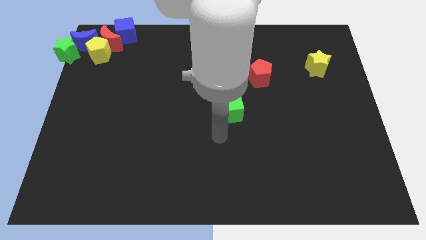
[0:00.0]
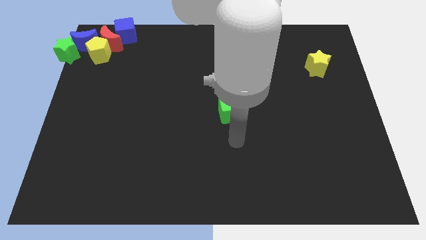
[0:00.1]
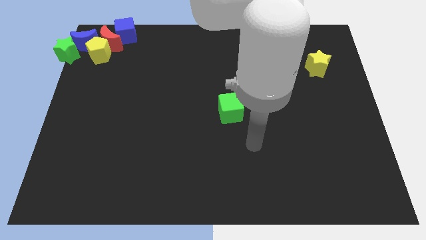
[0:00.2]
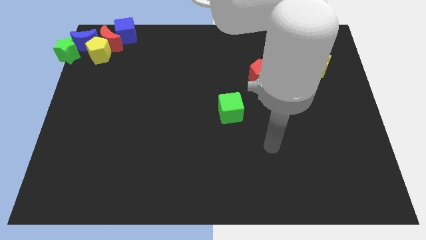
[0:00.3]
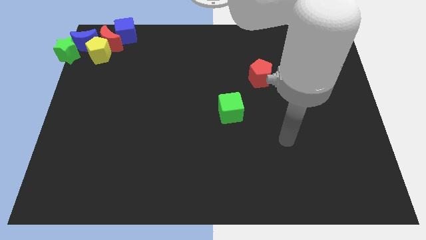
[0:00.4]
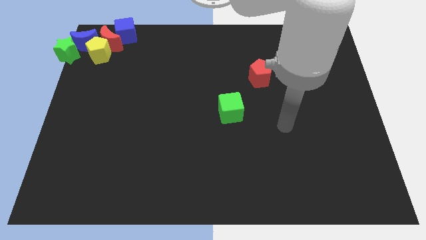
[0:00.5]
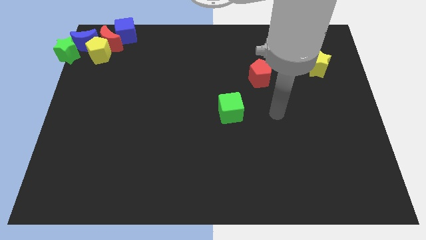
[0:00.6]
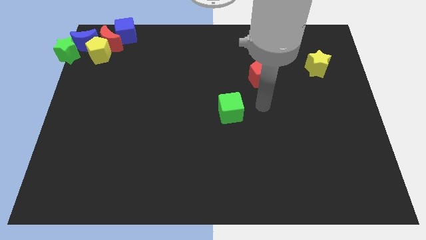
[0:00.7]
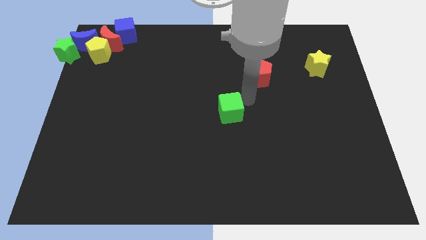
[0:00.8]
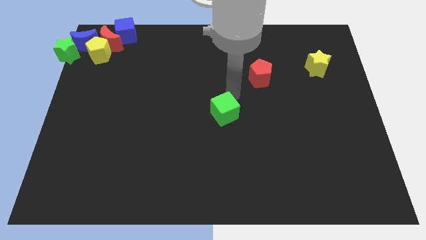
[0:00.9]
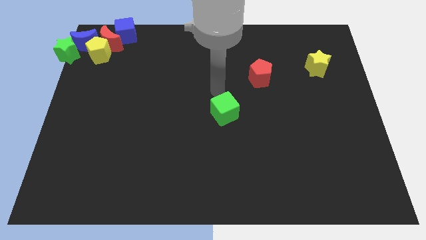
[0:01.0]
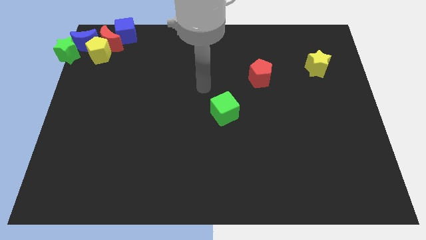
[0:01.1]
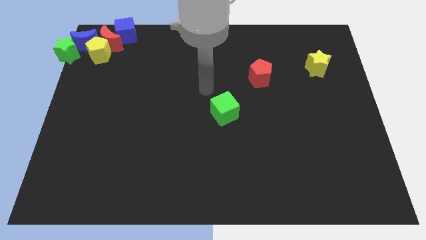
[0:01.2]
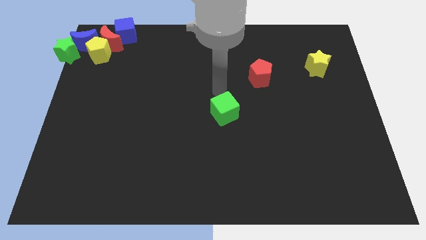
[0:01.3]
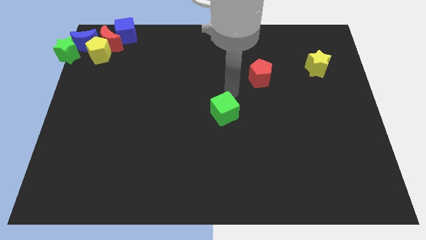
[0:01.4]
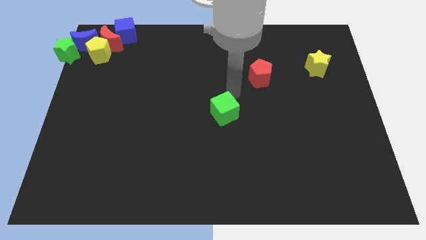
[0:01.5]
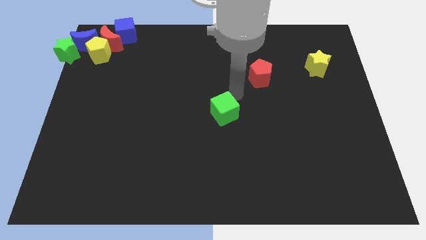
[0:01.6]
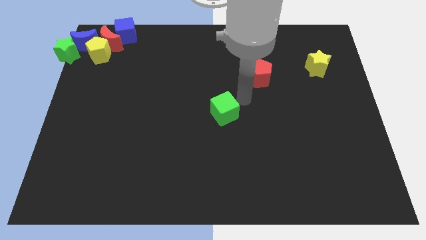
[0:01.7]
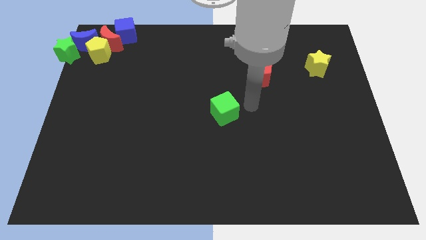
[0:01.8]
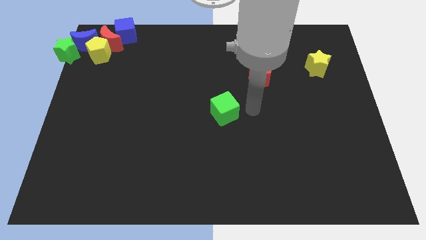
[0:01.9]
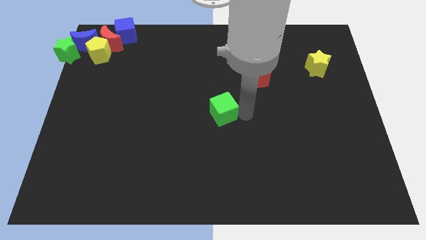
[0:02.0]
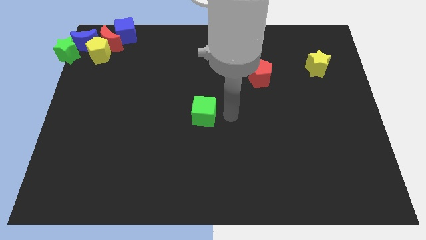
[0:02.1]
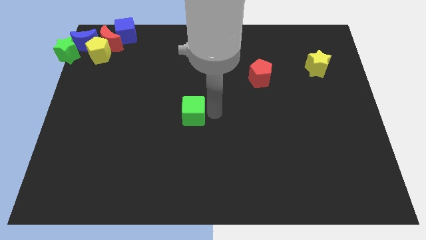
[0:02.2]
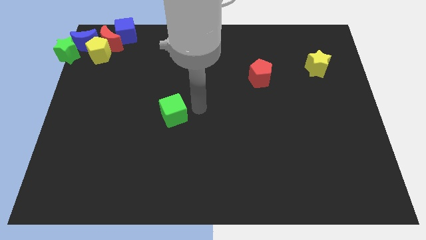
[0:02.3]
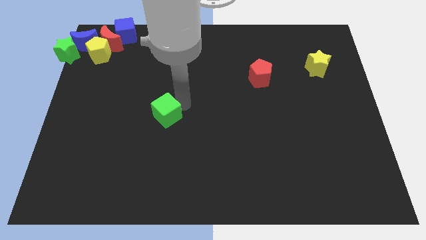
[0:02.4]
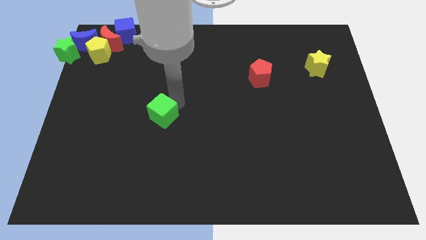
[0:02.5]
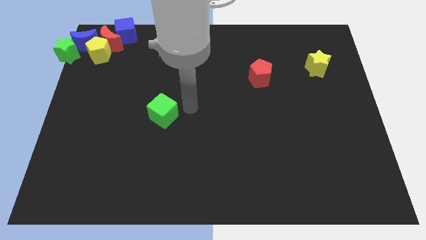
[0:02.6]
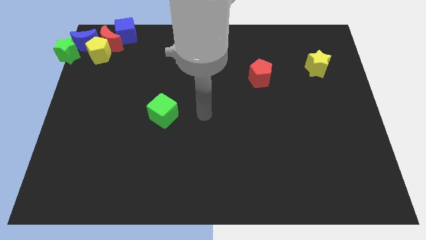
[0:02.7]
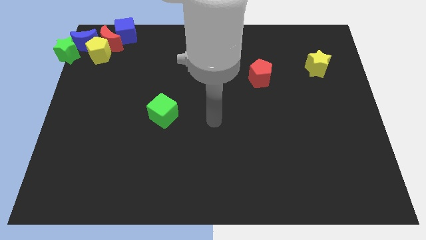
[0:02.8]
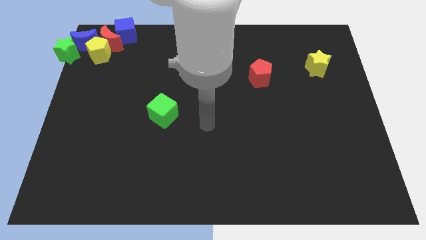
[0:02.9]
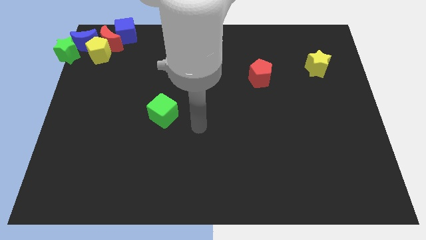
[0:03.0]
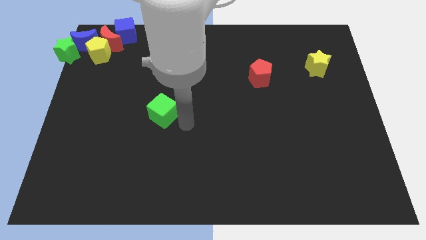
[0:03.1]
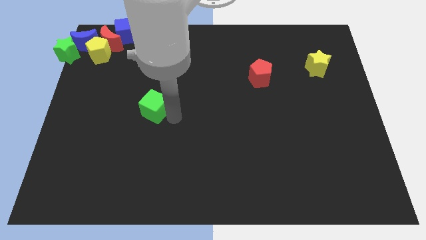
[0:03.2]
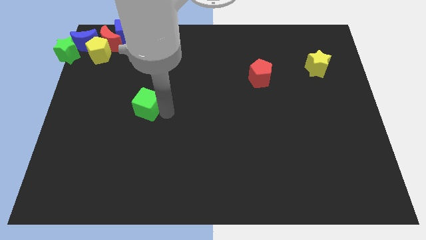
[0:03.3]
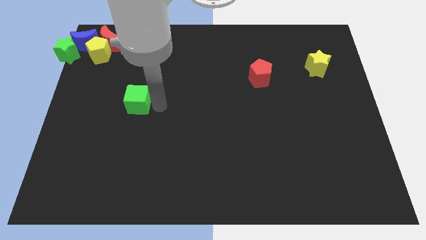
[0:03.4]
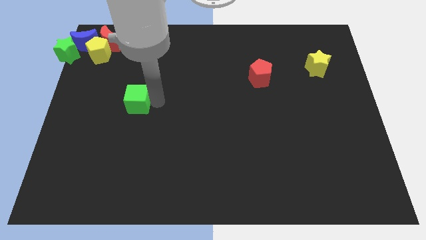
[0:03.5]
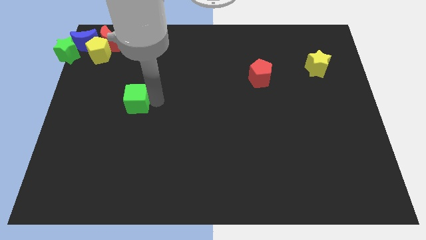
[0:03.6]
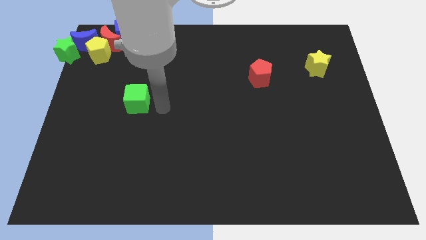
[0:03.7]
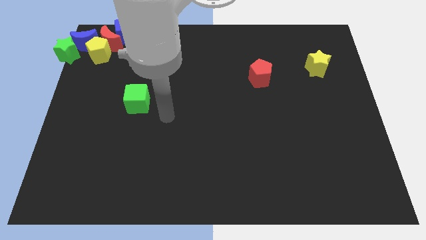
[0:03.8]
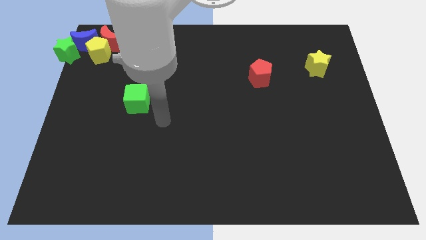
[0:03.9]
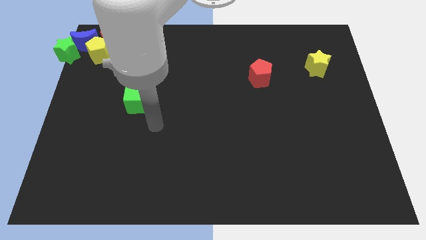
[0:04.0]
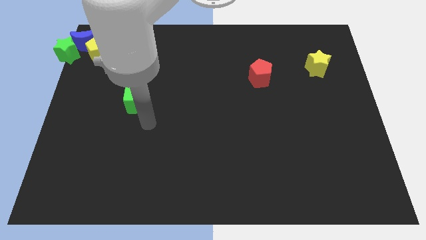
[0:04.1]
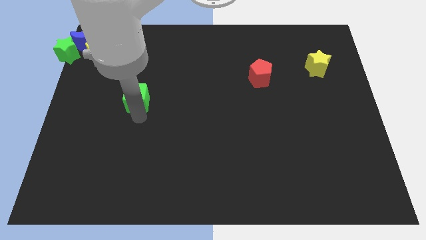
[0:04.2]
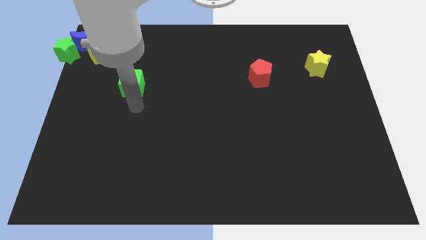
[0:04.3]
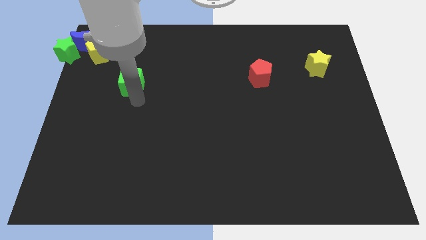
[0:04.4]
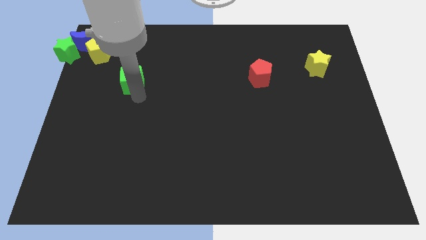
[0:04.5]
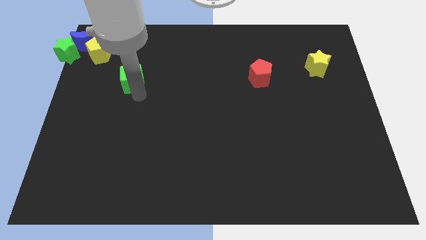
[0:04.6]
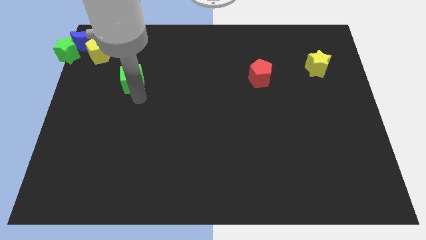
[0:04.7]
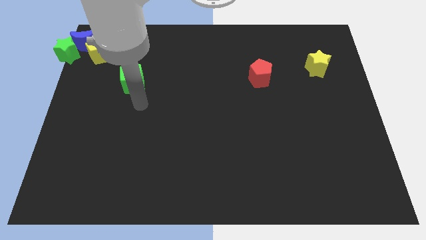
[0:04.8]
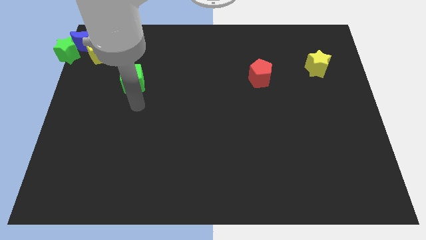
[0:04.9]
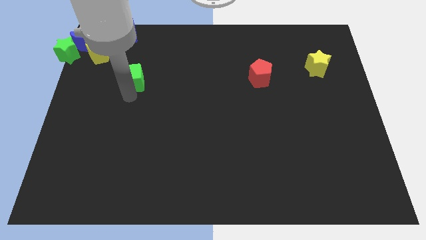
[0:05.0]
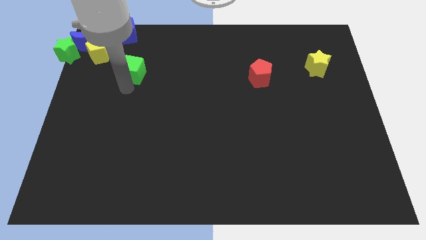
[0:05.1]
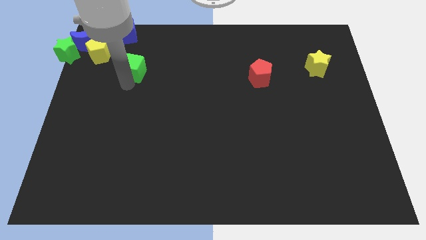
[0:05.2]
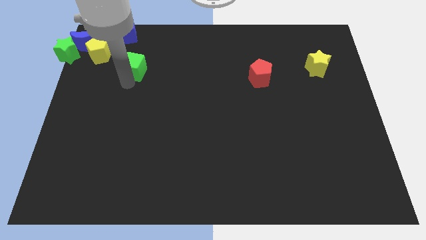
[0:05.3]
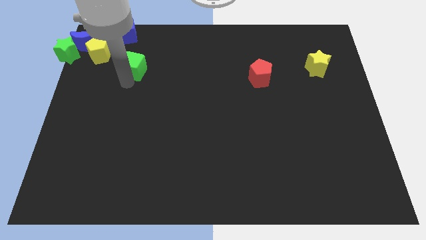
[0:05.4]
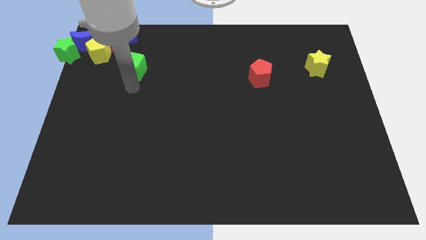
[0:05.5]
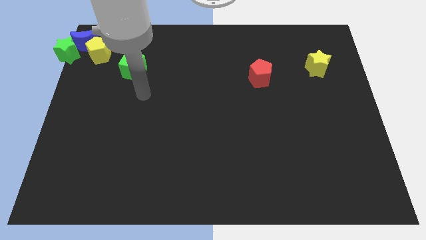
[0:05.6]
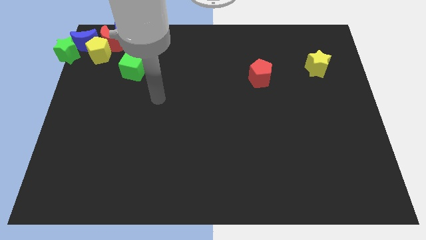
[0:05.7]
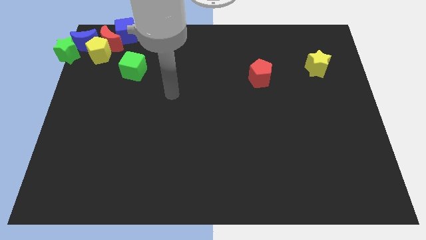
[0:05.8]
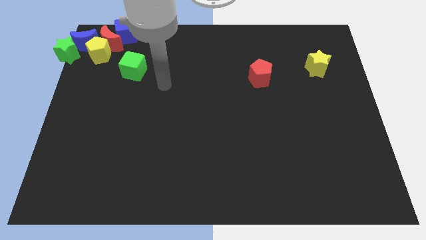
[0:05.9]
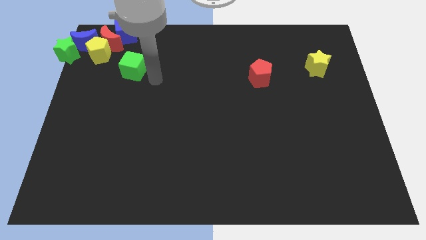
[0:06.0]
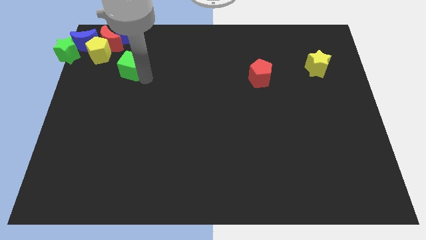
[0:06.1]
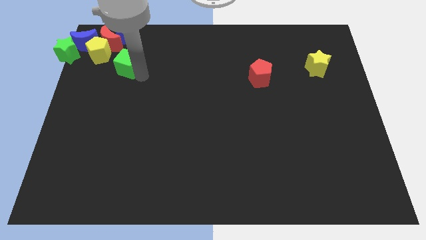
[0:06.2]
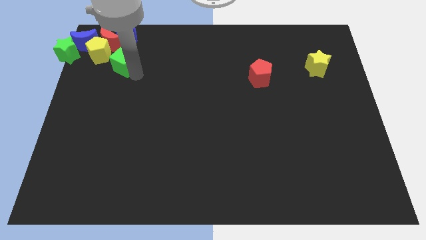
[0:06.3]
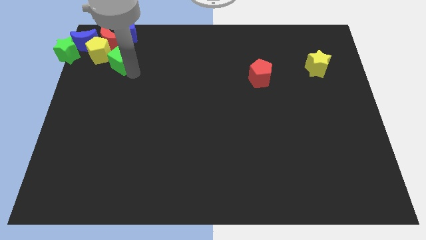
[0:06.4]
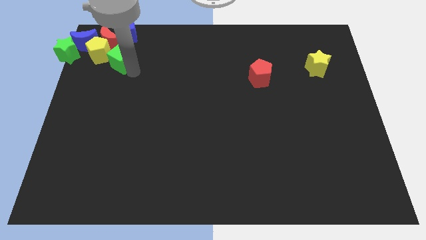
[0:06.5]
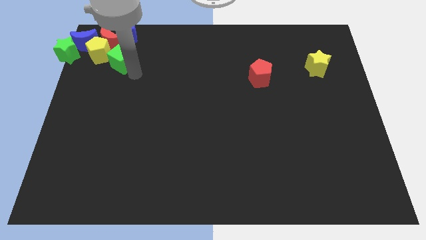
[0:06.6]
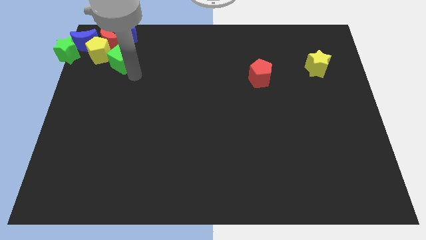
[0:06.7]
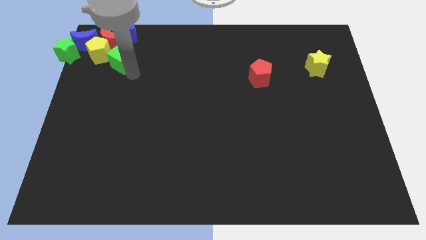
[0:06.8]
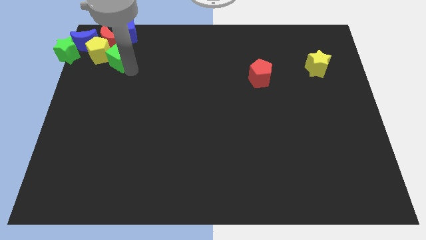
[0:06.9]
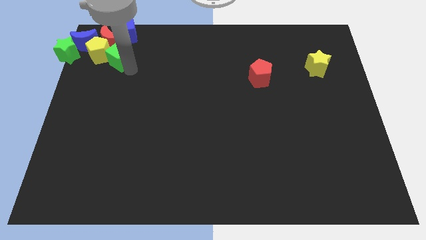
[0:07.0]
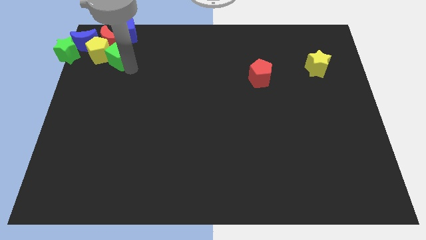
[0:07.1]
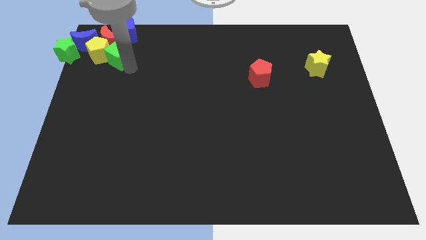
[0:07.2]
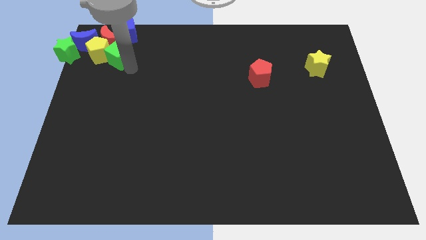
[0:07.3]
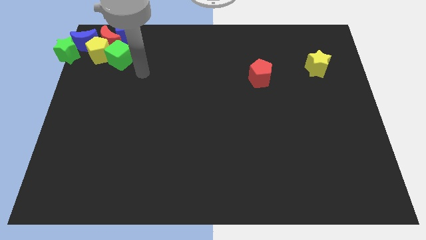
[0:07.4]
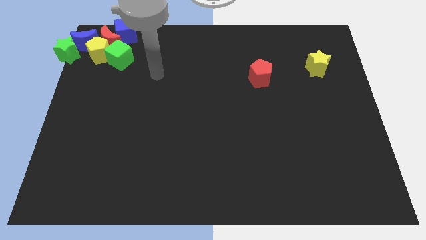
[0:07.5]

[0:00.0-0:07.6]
slide the green cube to the right of yellow pentagon

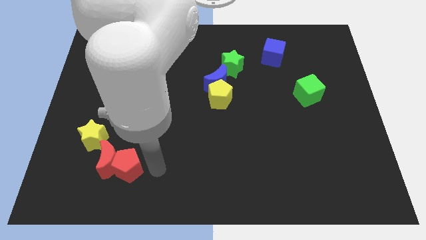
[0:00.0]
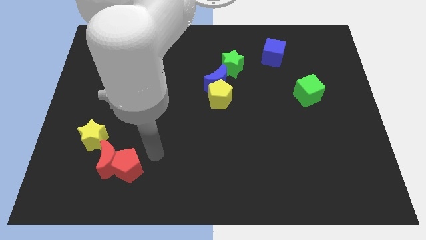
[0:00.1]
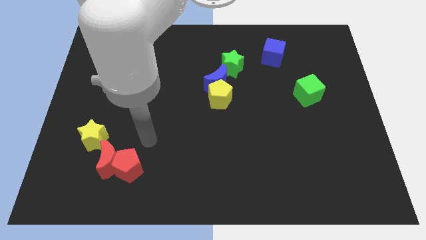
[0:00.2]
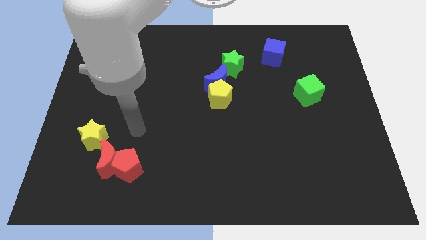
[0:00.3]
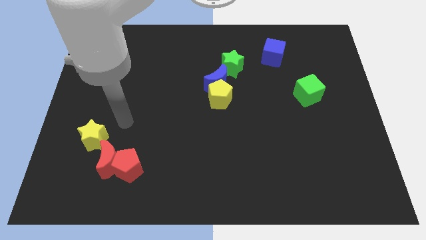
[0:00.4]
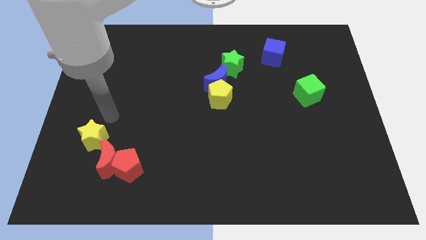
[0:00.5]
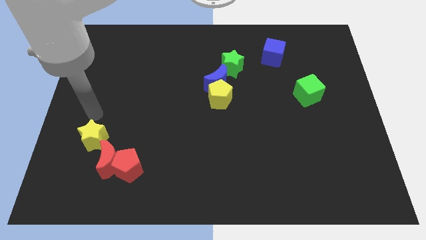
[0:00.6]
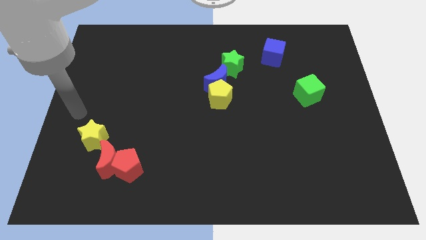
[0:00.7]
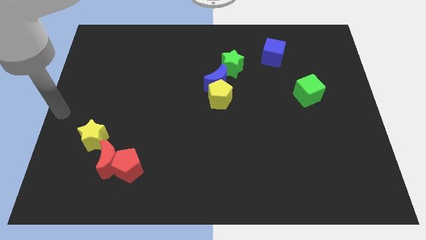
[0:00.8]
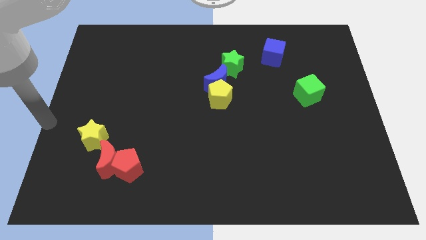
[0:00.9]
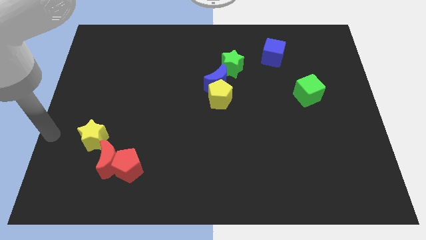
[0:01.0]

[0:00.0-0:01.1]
move your arm towards the left side of the yellow star

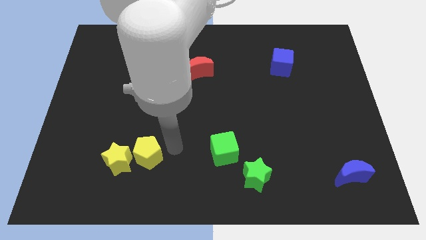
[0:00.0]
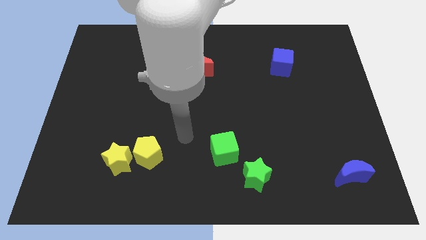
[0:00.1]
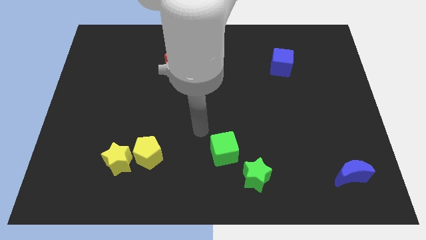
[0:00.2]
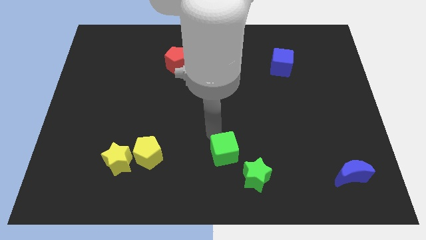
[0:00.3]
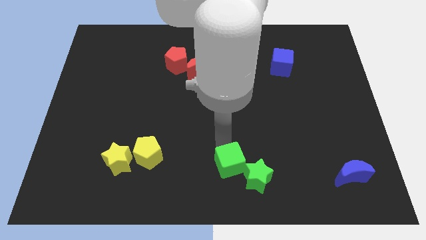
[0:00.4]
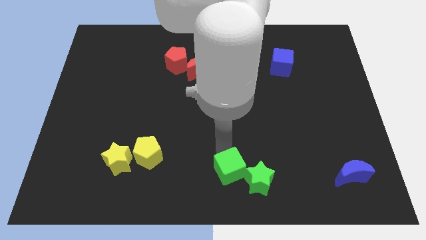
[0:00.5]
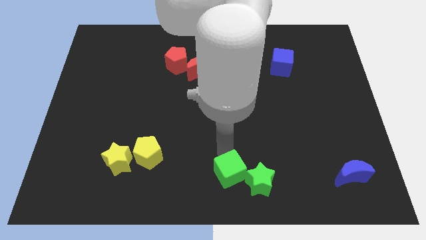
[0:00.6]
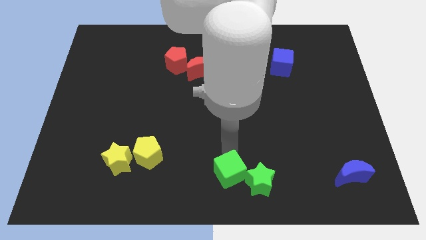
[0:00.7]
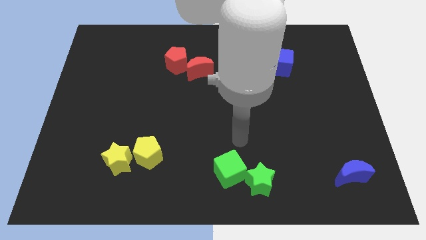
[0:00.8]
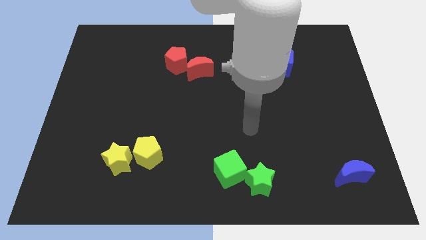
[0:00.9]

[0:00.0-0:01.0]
slightly push the green cube into green star
